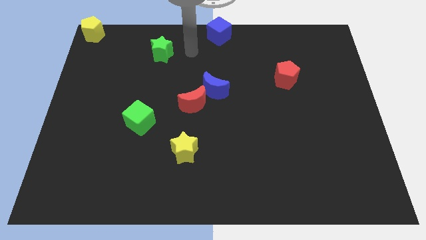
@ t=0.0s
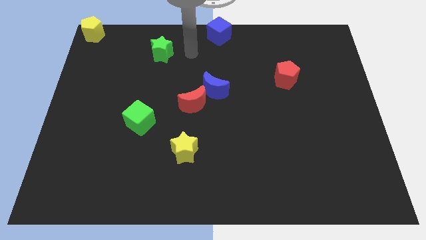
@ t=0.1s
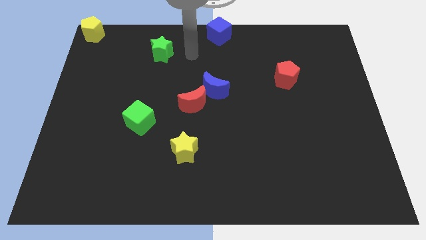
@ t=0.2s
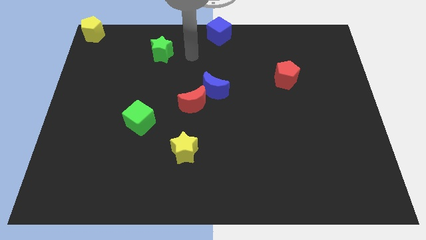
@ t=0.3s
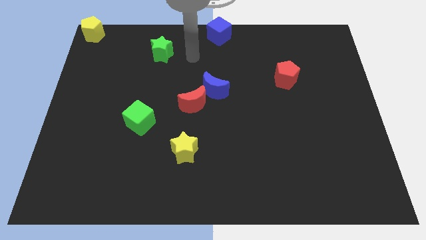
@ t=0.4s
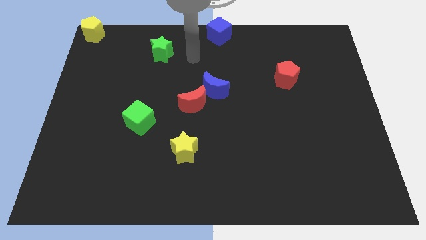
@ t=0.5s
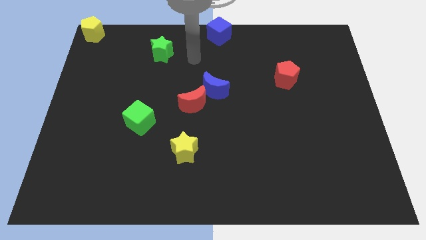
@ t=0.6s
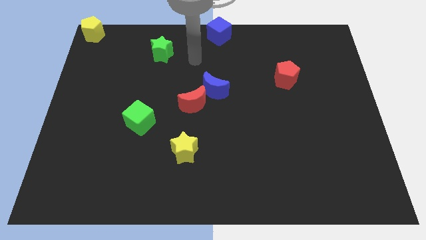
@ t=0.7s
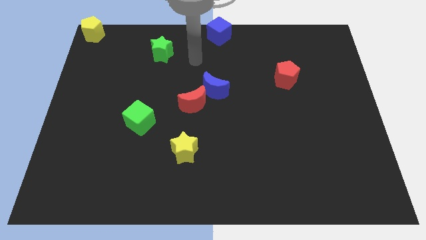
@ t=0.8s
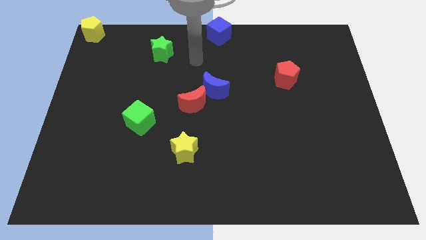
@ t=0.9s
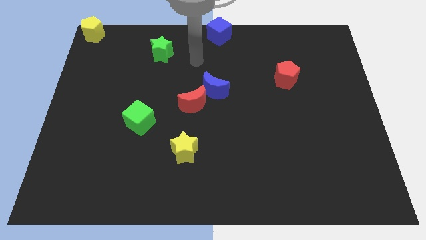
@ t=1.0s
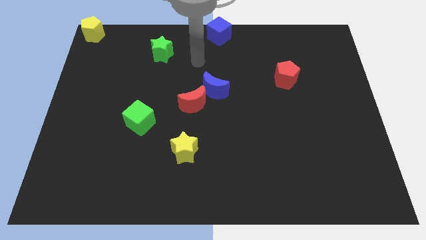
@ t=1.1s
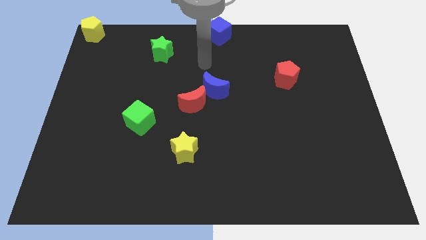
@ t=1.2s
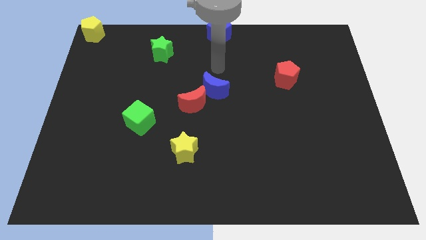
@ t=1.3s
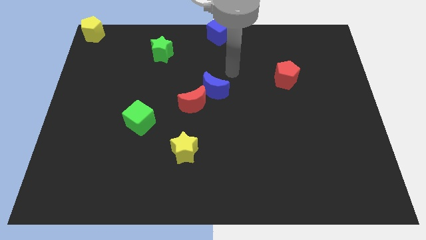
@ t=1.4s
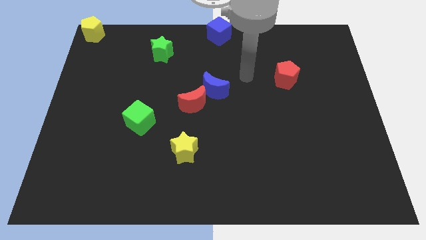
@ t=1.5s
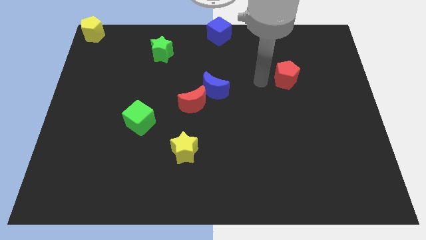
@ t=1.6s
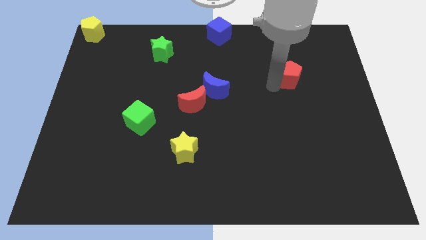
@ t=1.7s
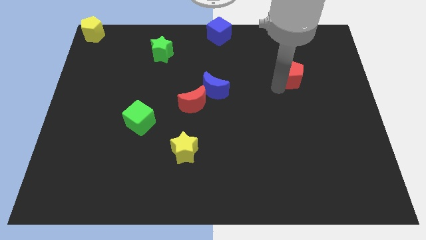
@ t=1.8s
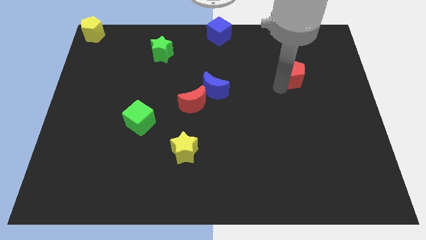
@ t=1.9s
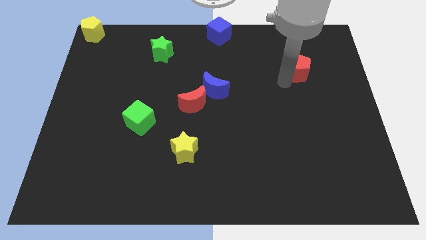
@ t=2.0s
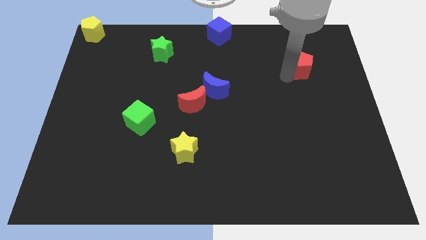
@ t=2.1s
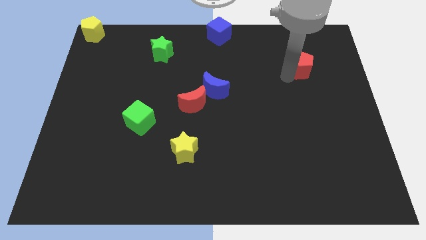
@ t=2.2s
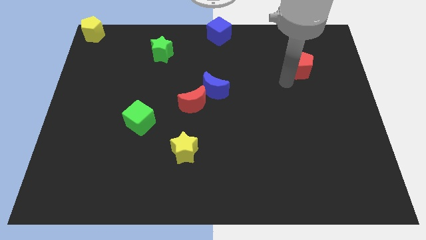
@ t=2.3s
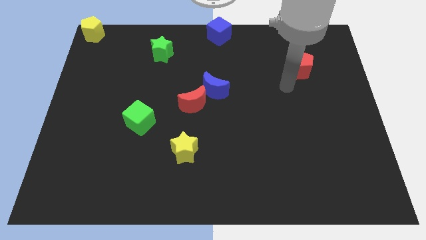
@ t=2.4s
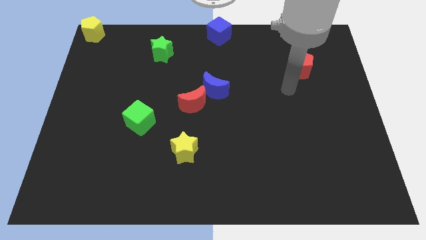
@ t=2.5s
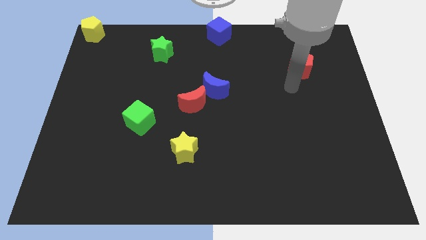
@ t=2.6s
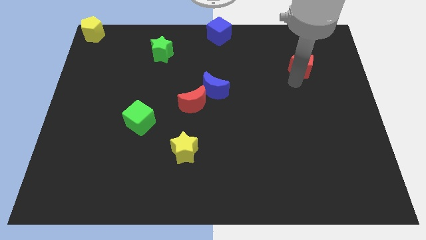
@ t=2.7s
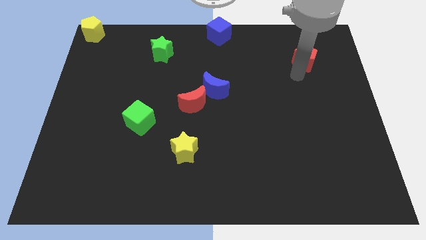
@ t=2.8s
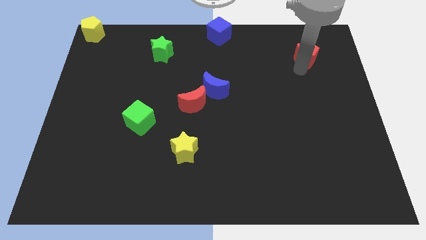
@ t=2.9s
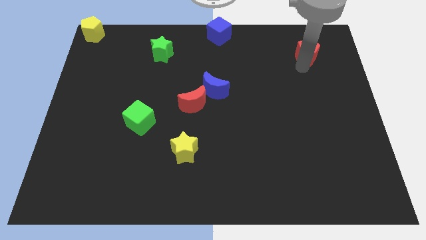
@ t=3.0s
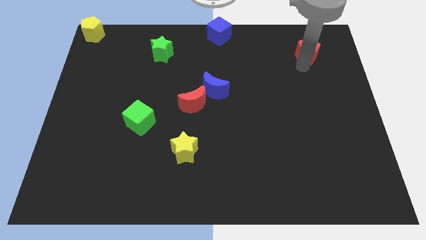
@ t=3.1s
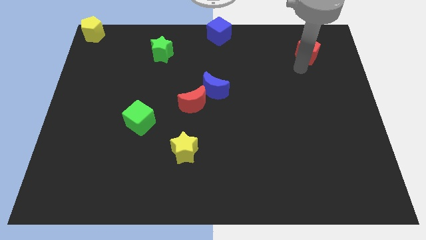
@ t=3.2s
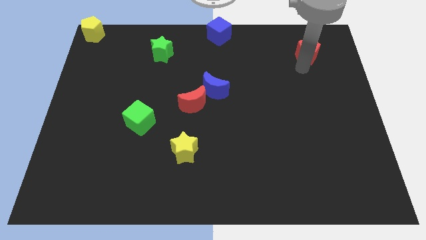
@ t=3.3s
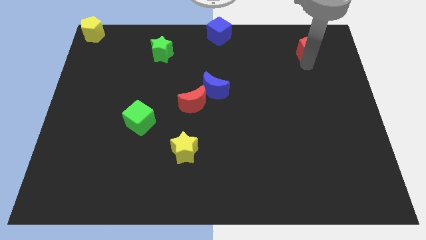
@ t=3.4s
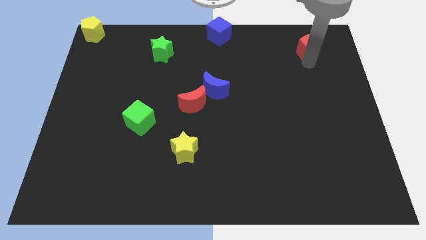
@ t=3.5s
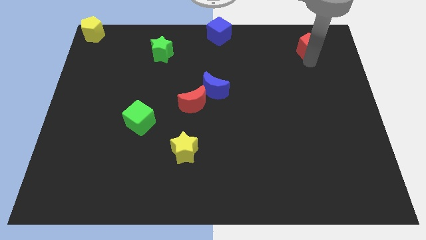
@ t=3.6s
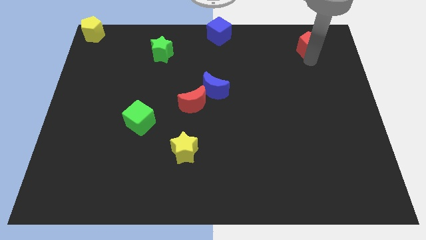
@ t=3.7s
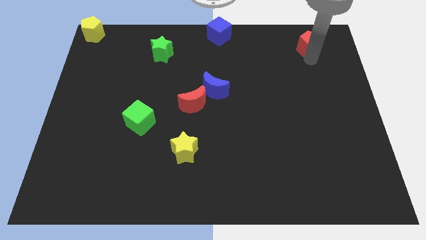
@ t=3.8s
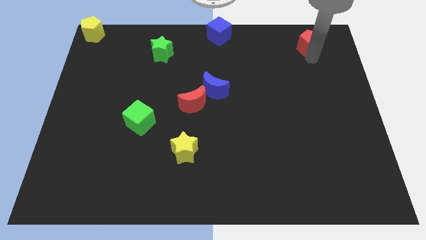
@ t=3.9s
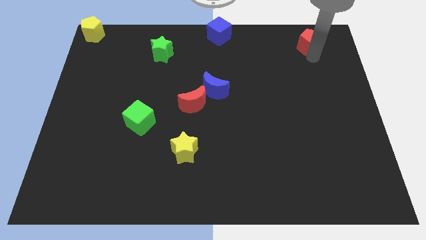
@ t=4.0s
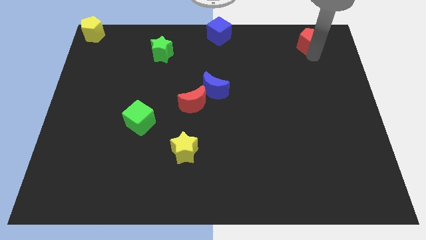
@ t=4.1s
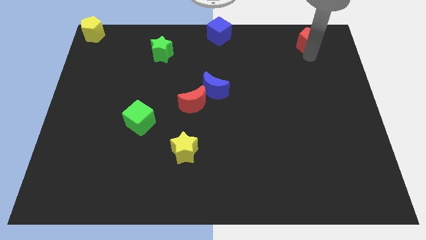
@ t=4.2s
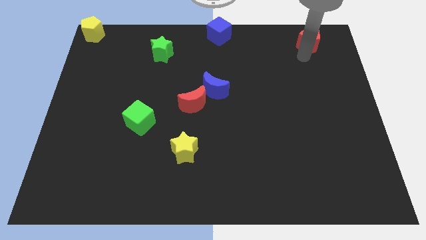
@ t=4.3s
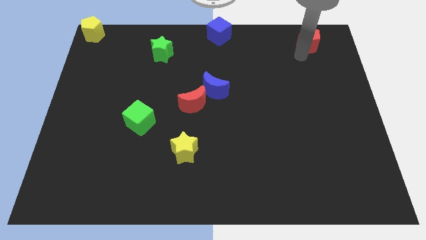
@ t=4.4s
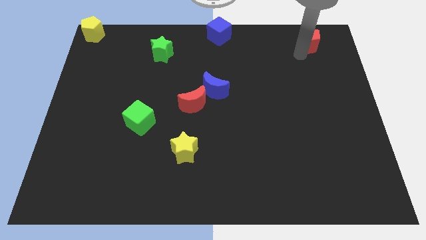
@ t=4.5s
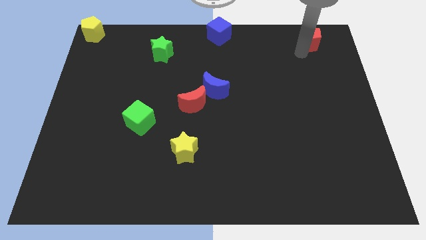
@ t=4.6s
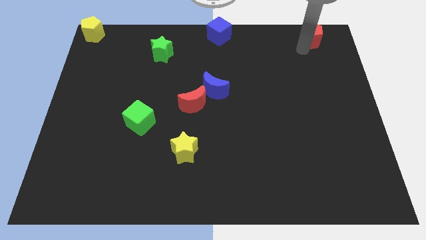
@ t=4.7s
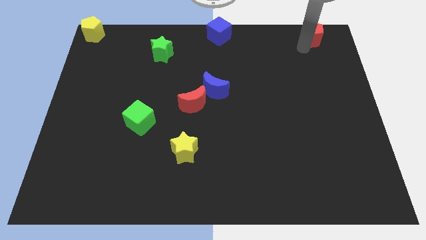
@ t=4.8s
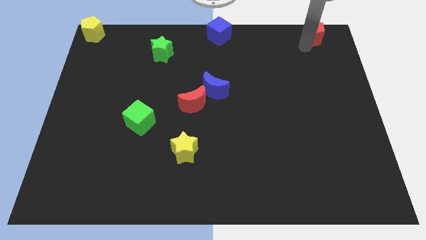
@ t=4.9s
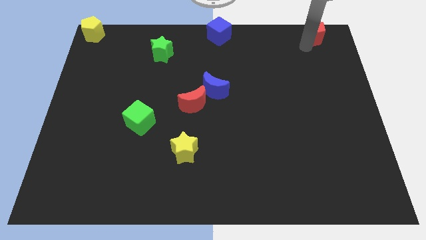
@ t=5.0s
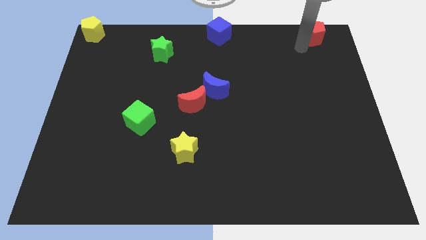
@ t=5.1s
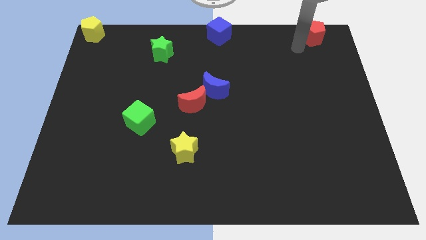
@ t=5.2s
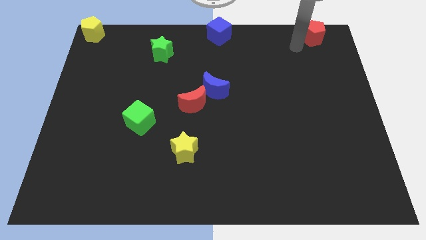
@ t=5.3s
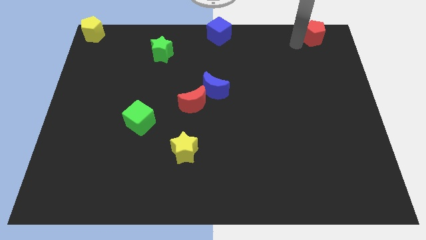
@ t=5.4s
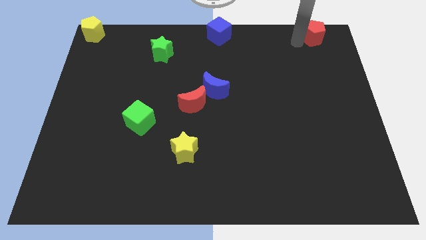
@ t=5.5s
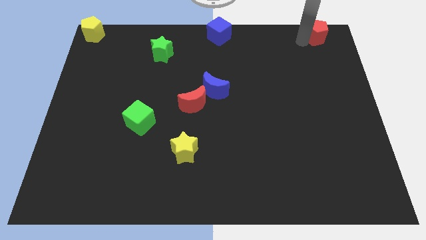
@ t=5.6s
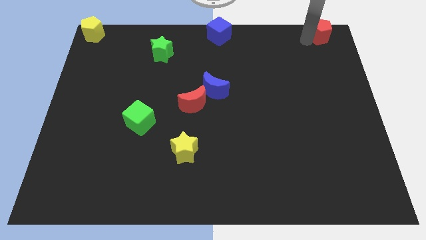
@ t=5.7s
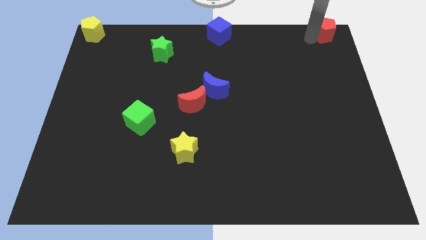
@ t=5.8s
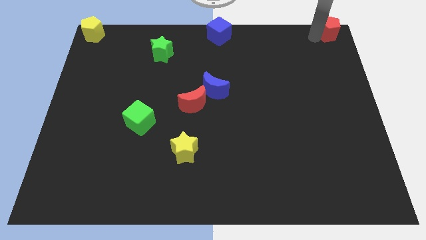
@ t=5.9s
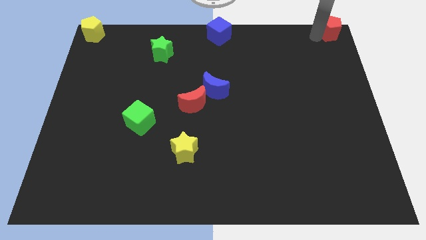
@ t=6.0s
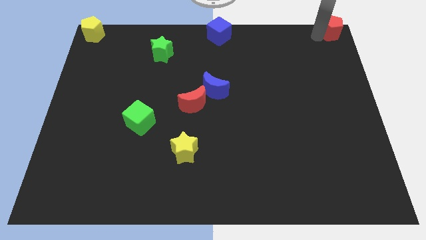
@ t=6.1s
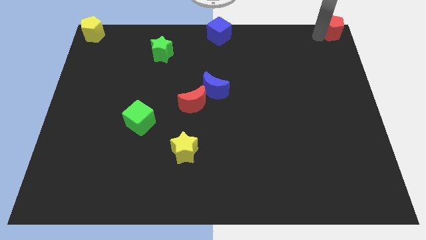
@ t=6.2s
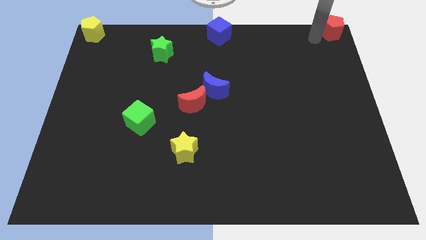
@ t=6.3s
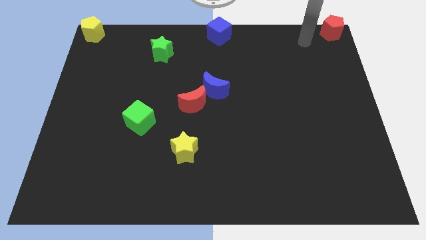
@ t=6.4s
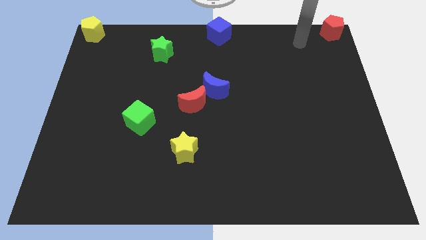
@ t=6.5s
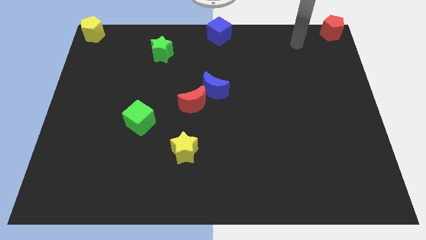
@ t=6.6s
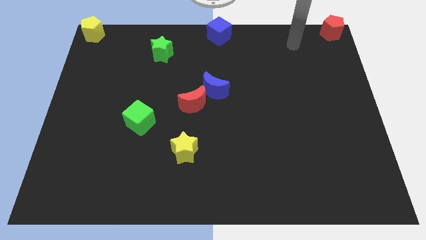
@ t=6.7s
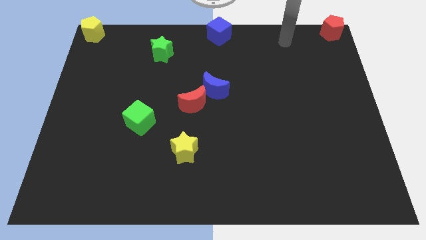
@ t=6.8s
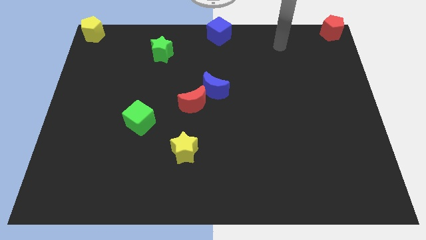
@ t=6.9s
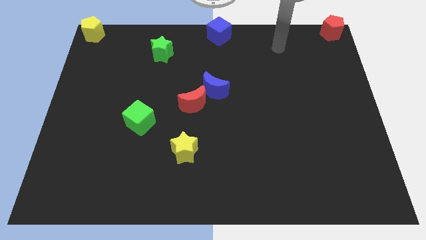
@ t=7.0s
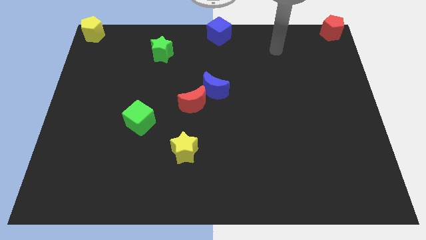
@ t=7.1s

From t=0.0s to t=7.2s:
place the red pentagon at the top right corner of the board

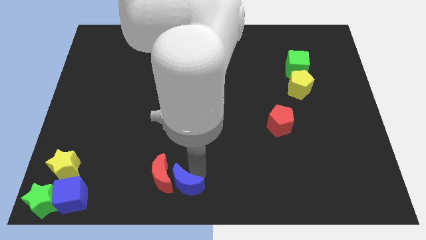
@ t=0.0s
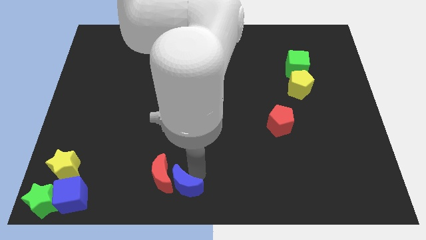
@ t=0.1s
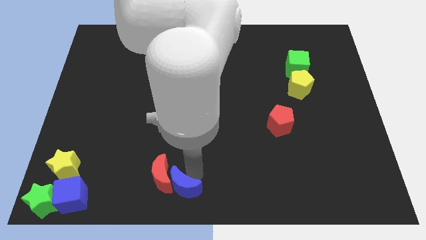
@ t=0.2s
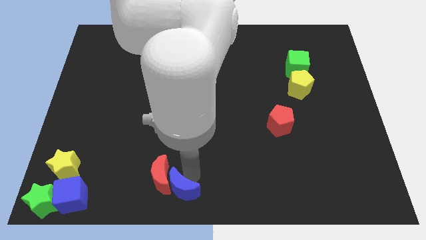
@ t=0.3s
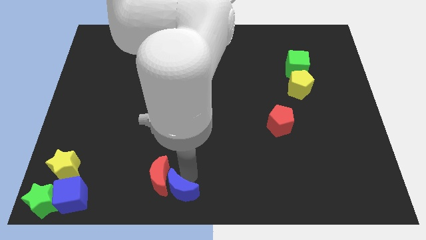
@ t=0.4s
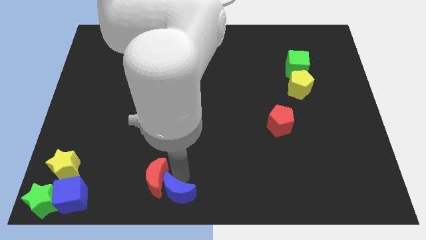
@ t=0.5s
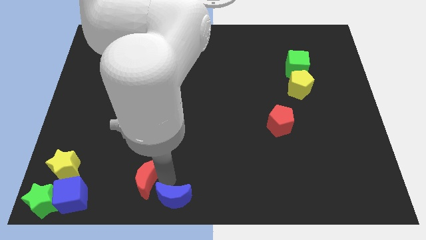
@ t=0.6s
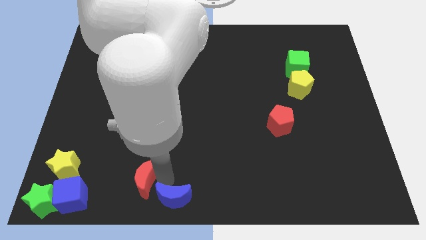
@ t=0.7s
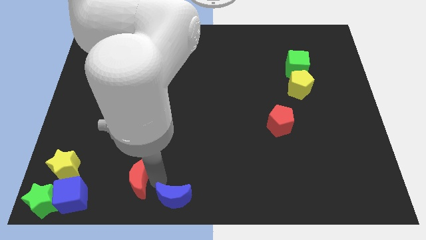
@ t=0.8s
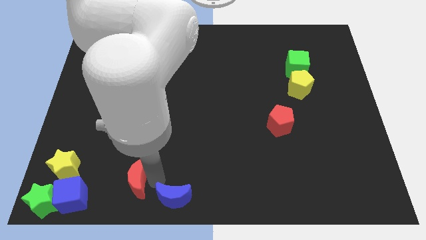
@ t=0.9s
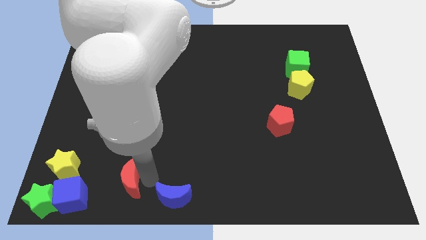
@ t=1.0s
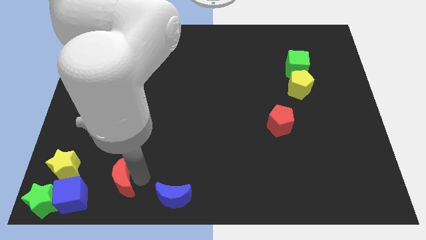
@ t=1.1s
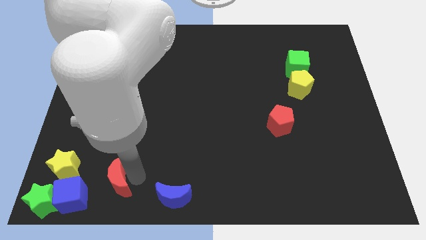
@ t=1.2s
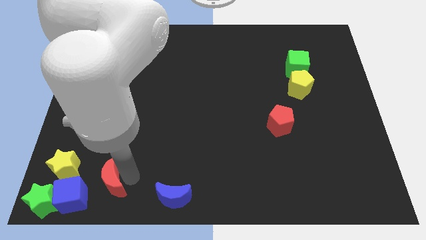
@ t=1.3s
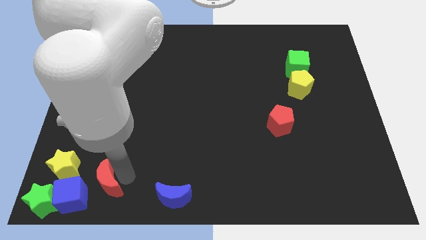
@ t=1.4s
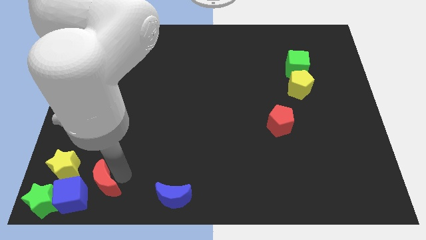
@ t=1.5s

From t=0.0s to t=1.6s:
separate red moon away from blue moon
